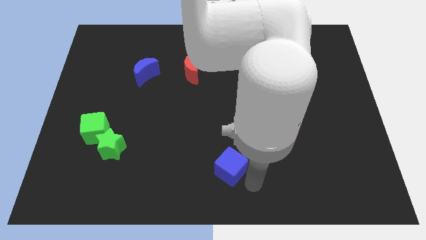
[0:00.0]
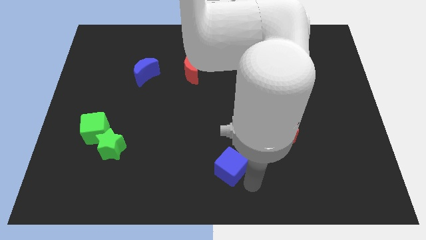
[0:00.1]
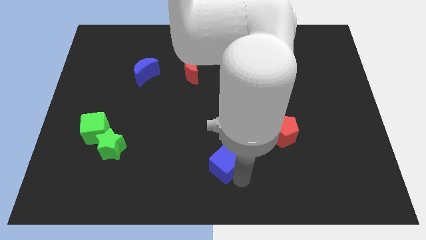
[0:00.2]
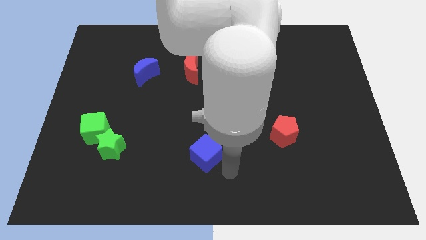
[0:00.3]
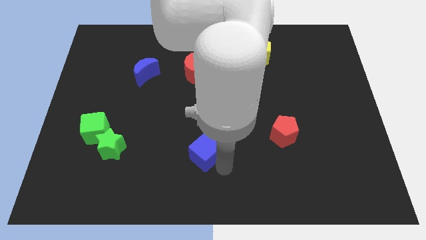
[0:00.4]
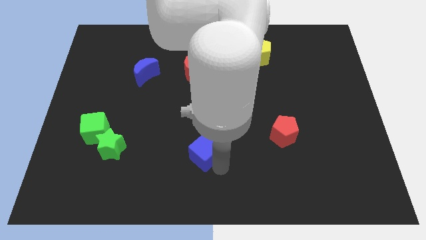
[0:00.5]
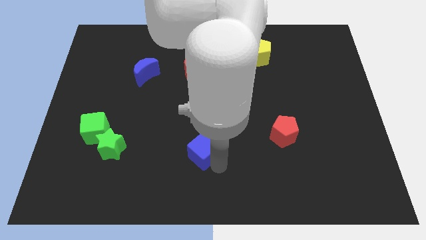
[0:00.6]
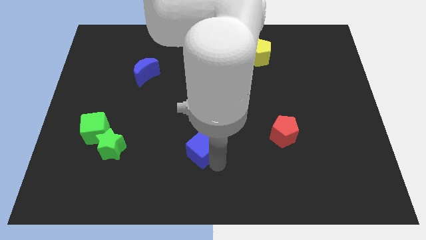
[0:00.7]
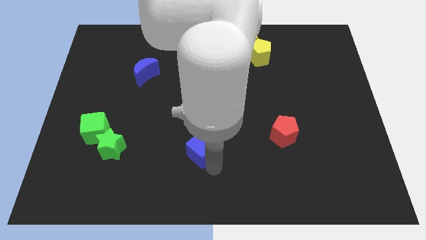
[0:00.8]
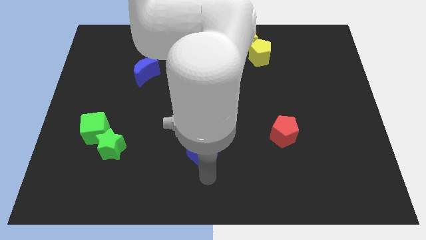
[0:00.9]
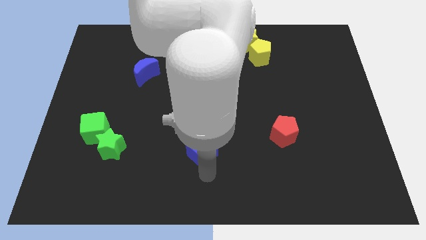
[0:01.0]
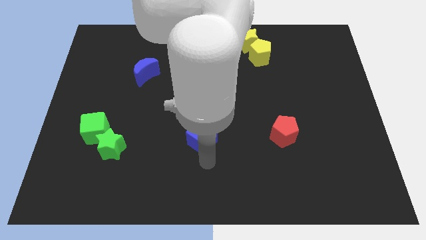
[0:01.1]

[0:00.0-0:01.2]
place the blue cube left parallel to red pentagon

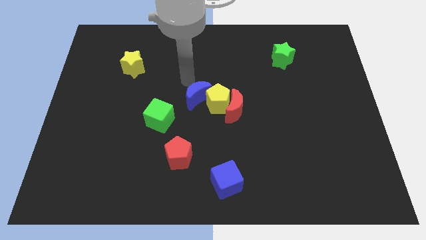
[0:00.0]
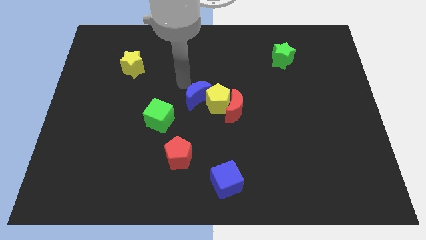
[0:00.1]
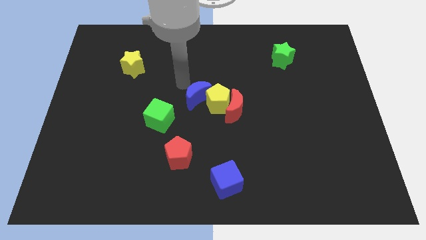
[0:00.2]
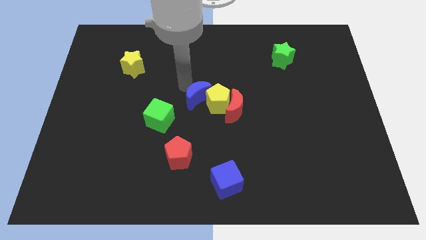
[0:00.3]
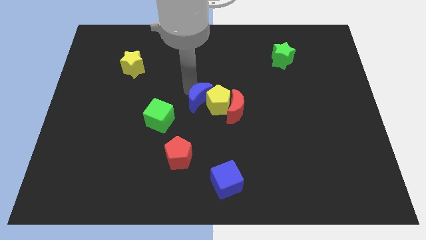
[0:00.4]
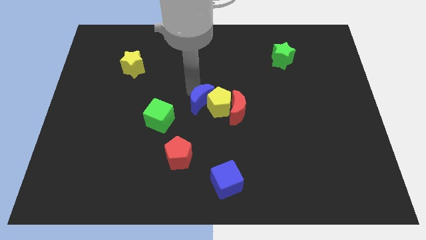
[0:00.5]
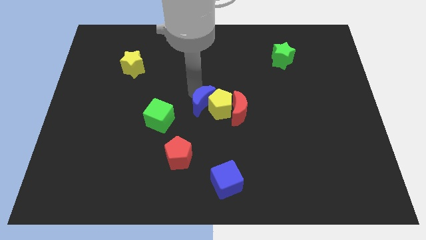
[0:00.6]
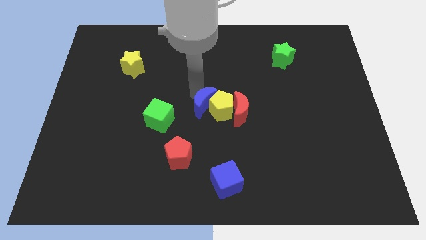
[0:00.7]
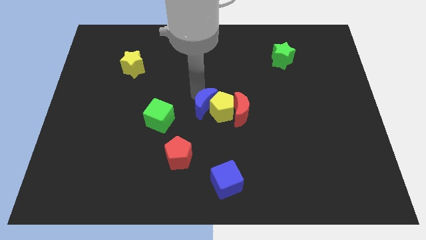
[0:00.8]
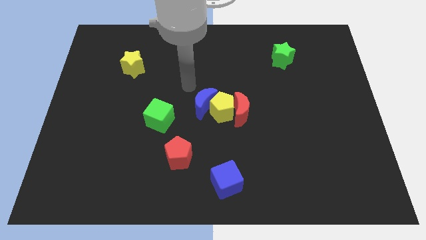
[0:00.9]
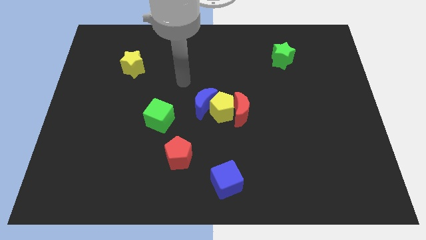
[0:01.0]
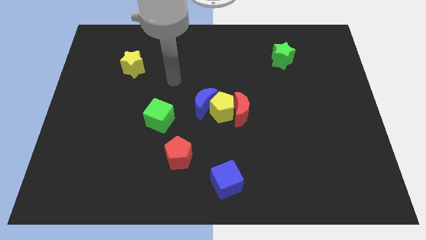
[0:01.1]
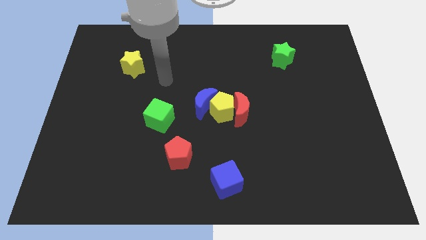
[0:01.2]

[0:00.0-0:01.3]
move the yellow pentagon downwards slightly with the blue moon

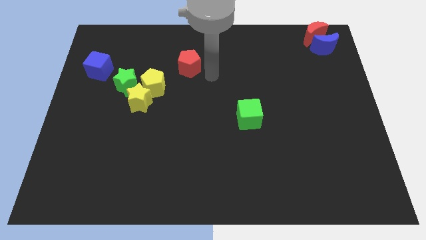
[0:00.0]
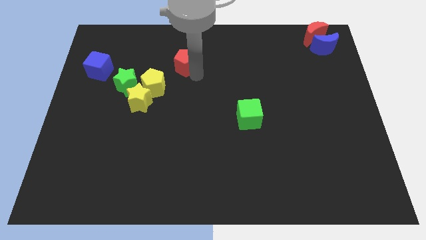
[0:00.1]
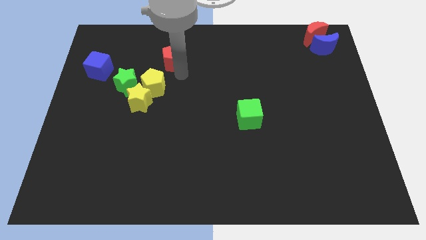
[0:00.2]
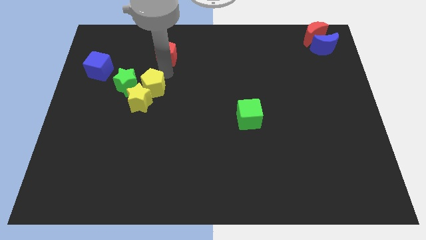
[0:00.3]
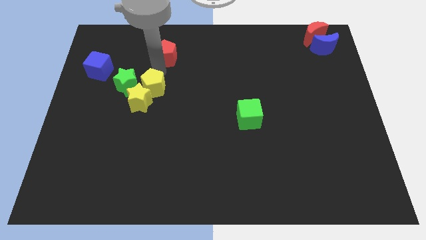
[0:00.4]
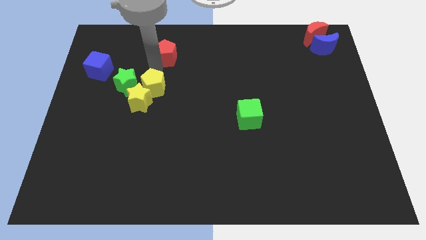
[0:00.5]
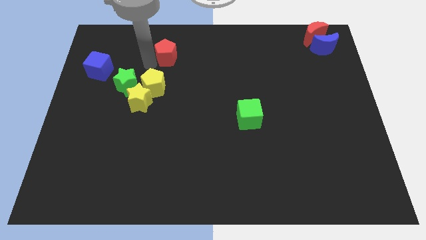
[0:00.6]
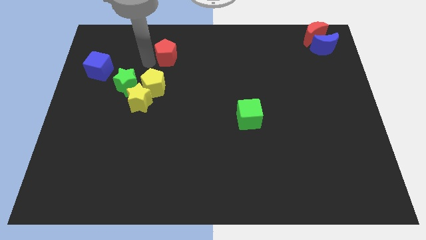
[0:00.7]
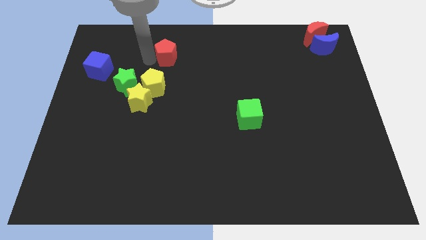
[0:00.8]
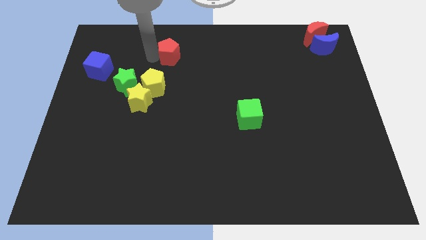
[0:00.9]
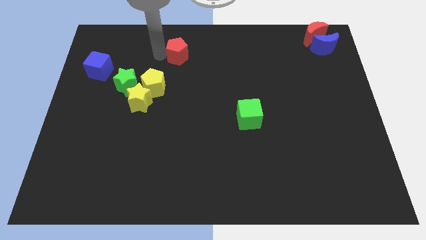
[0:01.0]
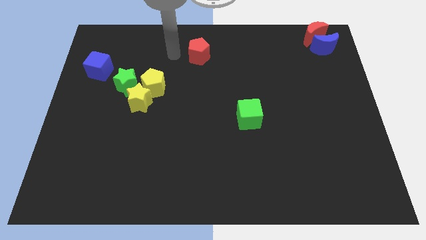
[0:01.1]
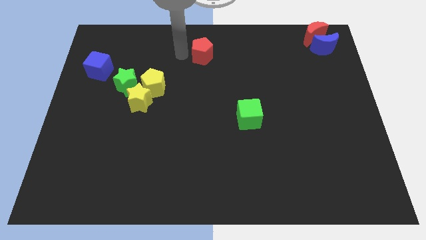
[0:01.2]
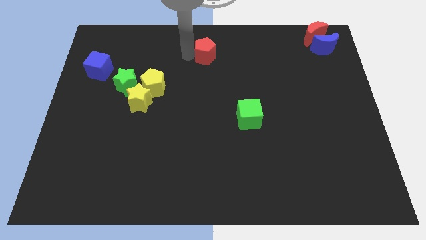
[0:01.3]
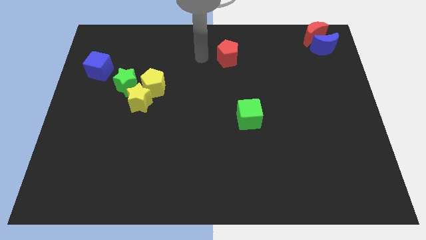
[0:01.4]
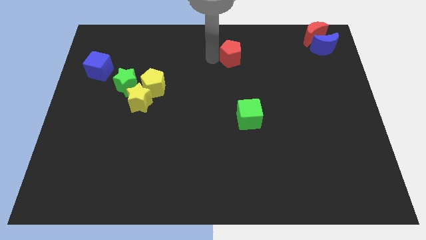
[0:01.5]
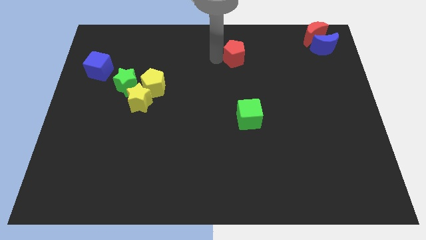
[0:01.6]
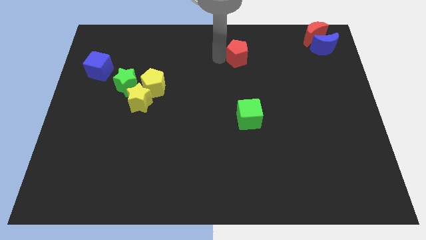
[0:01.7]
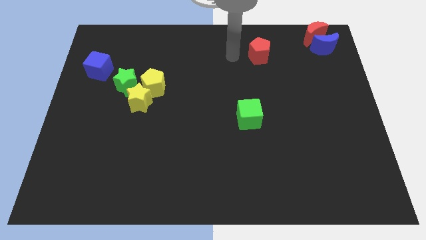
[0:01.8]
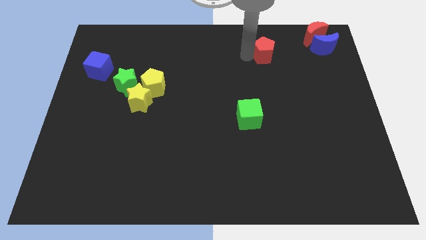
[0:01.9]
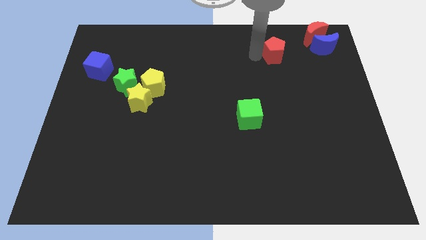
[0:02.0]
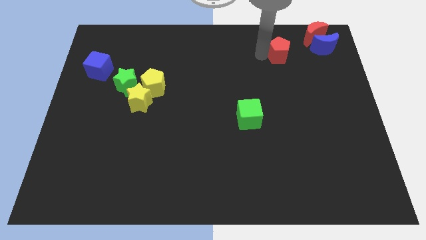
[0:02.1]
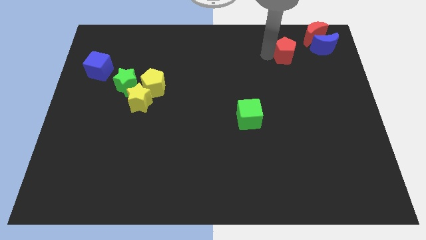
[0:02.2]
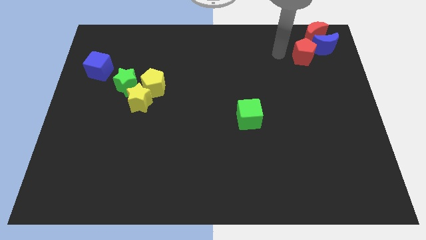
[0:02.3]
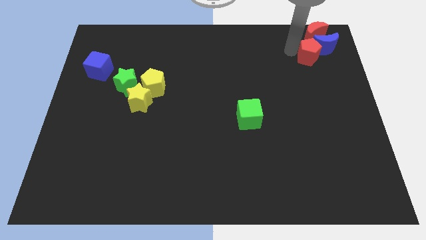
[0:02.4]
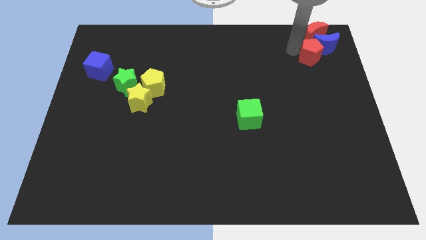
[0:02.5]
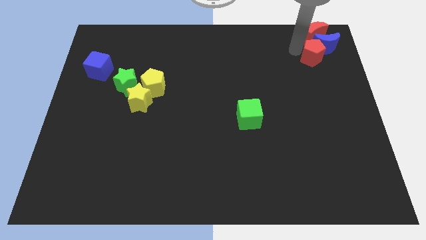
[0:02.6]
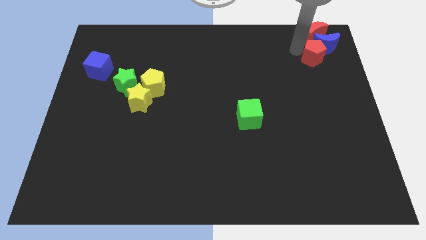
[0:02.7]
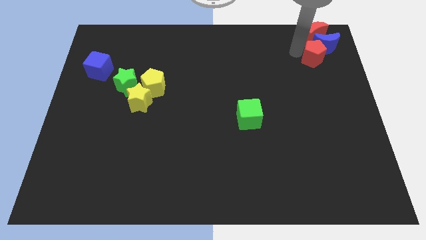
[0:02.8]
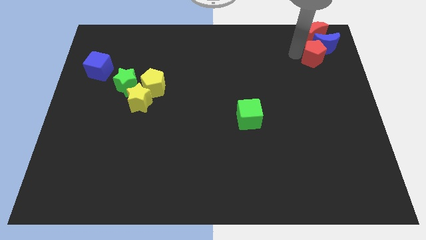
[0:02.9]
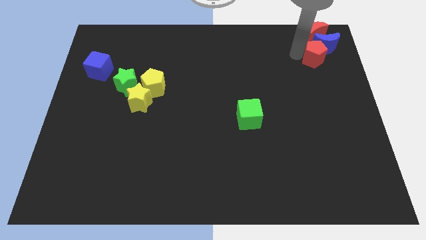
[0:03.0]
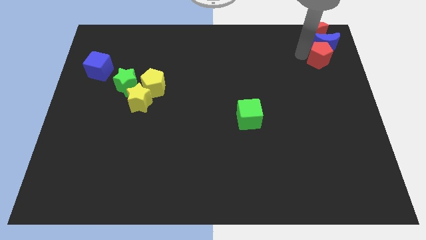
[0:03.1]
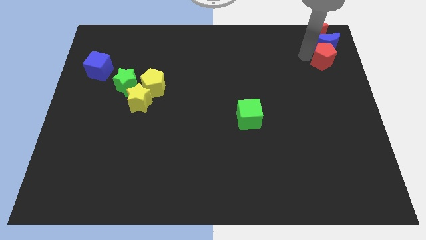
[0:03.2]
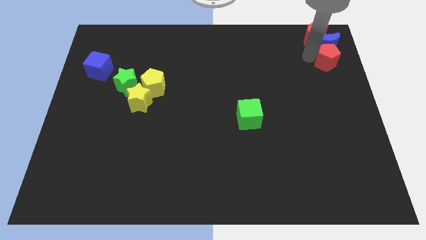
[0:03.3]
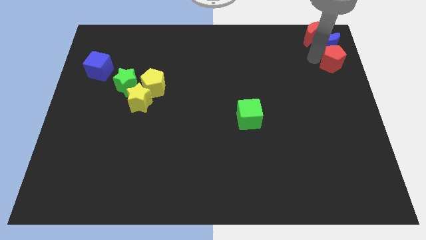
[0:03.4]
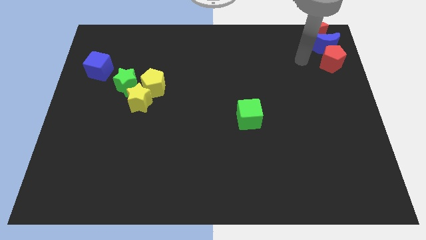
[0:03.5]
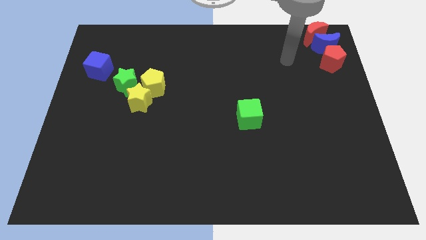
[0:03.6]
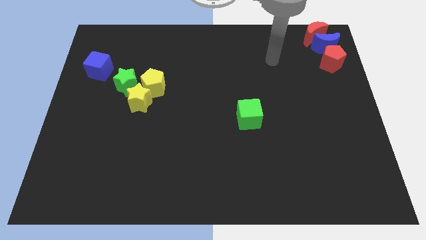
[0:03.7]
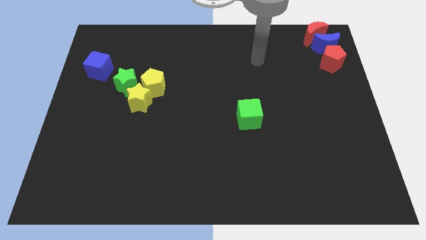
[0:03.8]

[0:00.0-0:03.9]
push the red pentagon to the bottom side of the blue moon

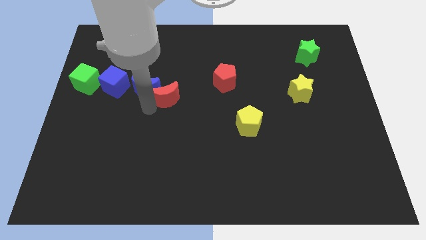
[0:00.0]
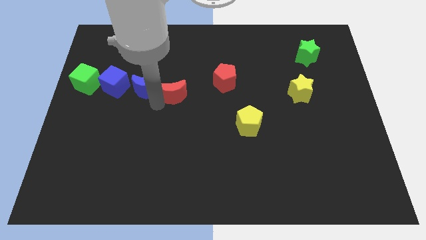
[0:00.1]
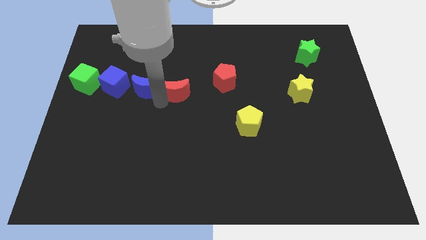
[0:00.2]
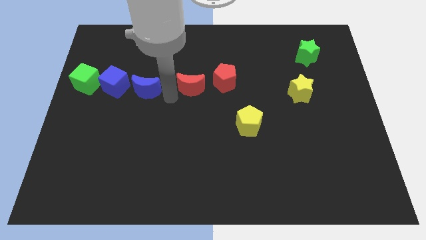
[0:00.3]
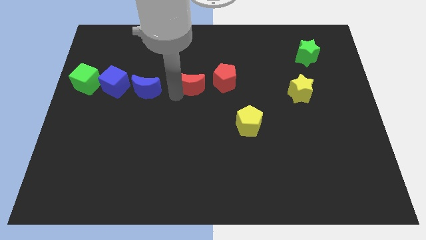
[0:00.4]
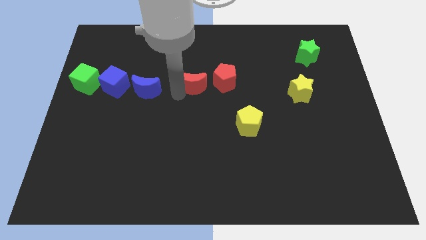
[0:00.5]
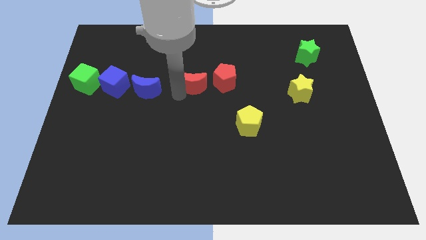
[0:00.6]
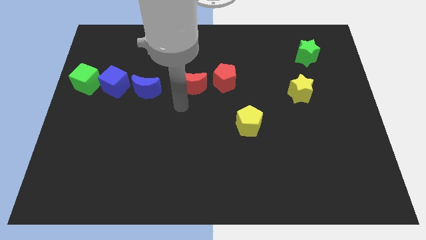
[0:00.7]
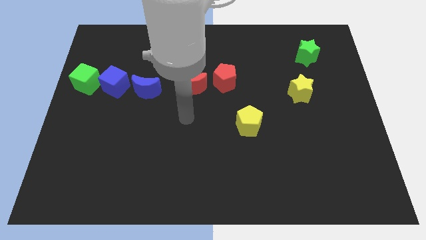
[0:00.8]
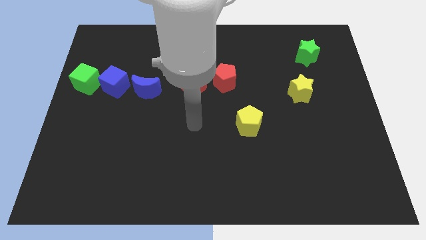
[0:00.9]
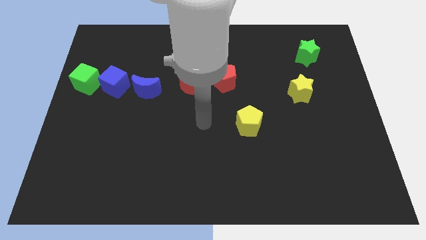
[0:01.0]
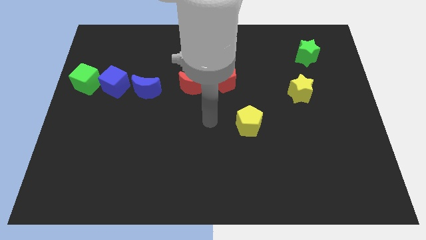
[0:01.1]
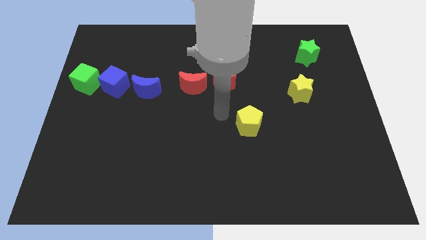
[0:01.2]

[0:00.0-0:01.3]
push the red crescent to the left of the red pentagon

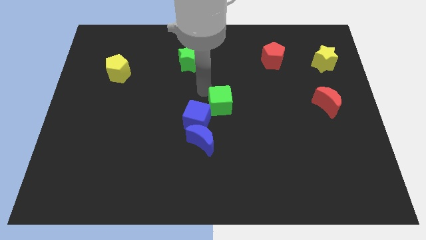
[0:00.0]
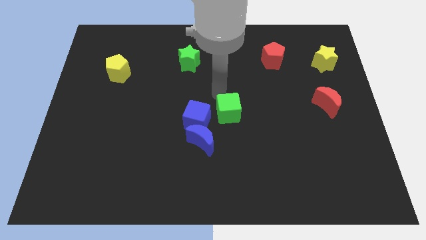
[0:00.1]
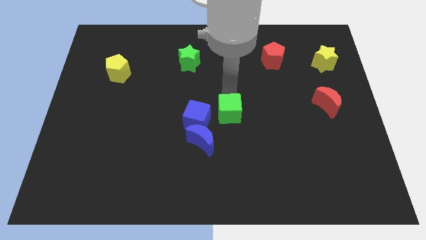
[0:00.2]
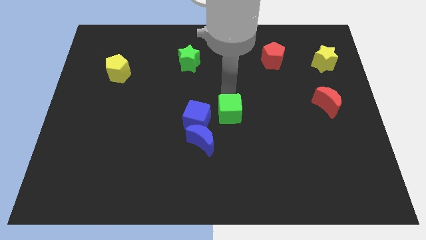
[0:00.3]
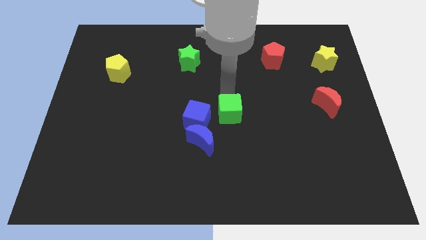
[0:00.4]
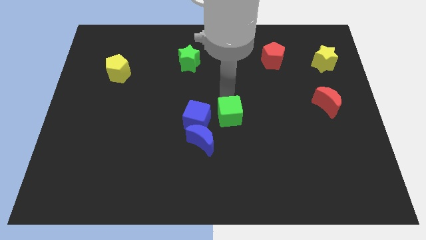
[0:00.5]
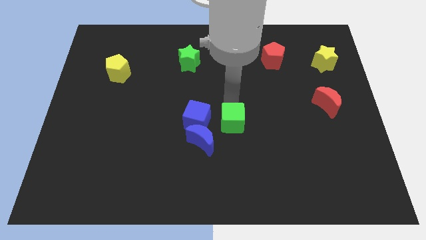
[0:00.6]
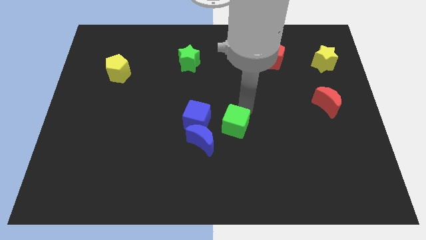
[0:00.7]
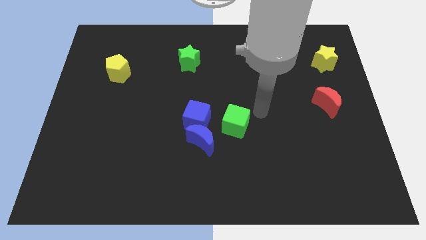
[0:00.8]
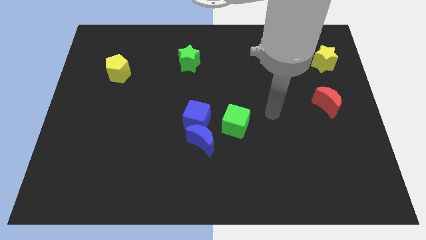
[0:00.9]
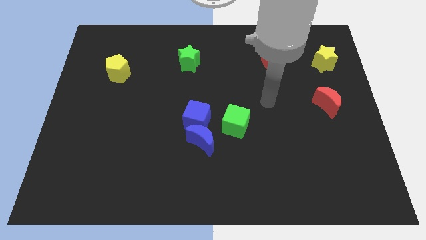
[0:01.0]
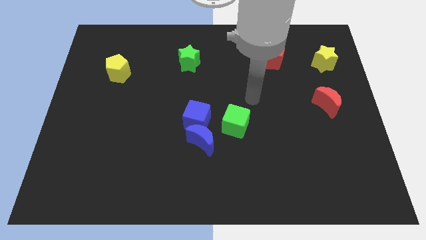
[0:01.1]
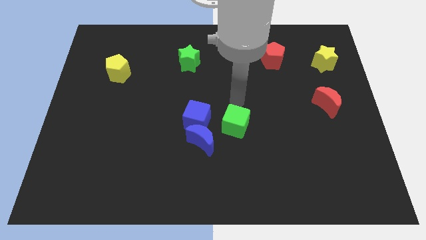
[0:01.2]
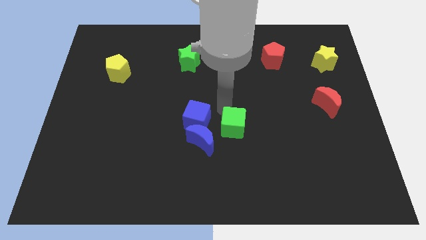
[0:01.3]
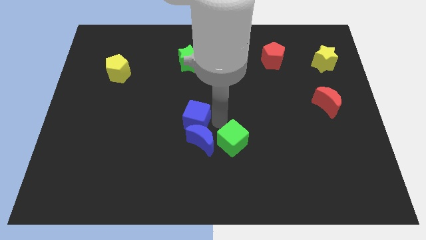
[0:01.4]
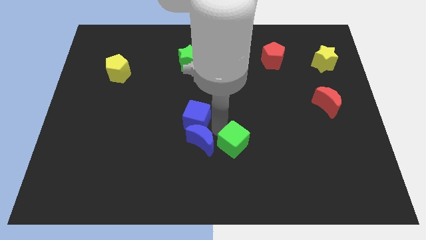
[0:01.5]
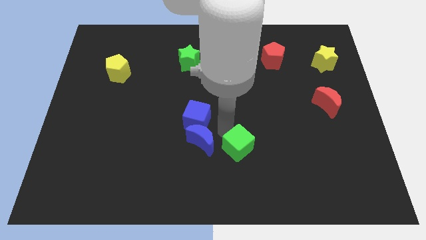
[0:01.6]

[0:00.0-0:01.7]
place the green cube to right side of the blue crescent
